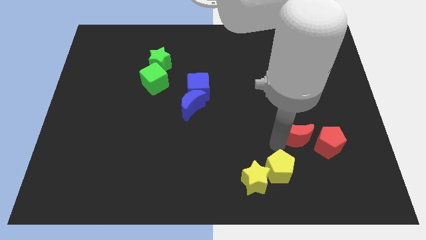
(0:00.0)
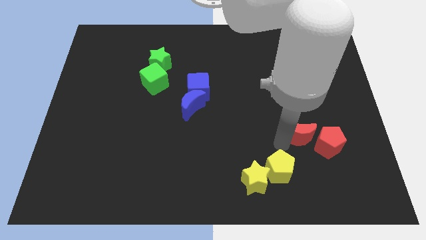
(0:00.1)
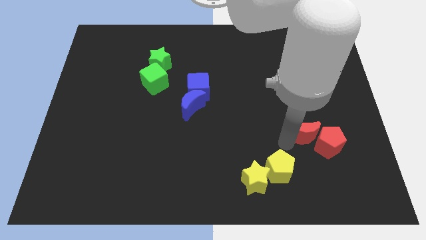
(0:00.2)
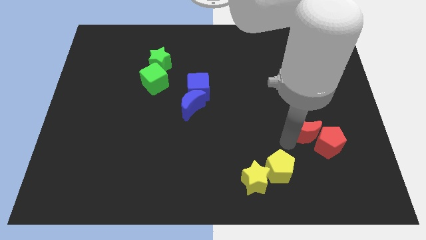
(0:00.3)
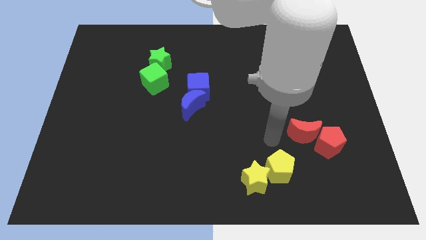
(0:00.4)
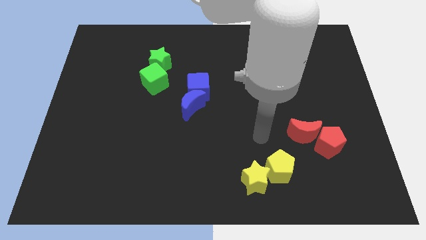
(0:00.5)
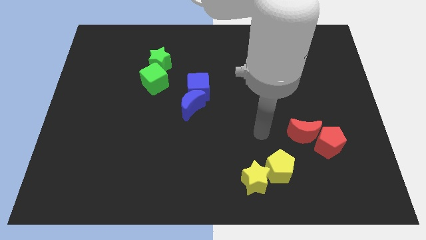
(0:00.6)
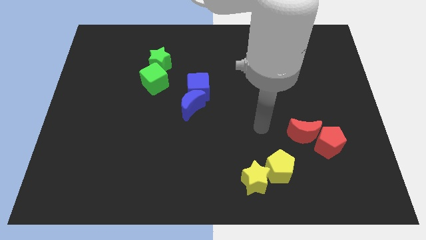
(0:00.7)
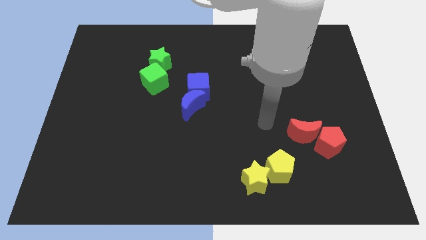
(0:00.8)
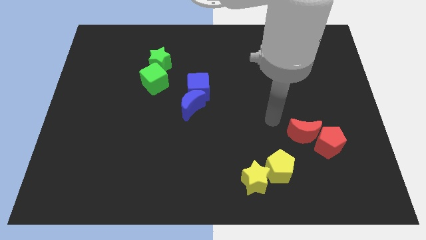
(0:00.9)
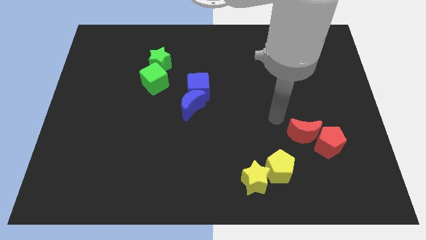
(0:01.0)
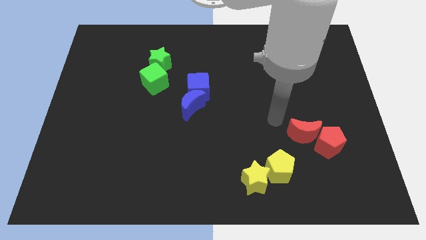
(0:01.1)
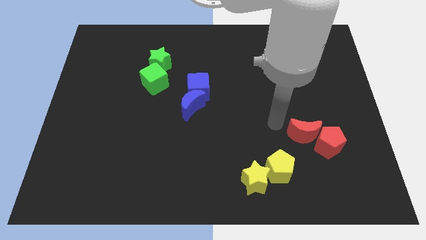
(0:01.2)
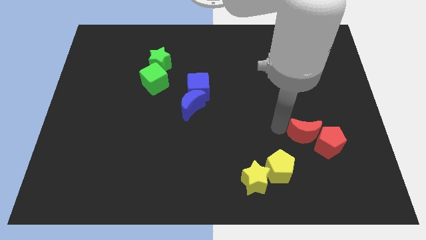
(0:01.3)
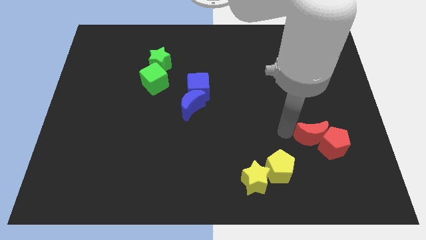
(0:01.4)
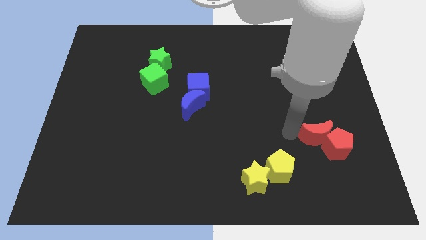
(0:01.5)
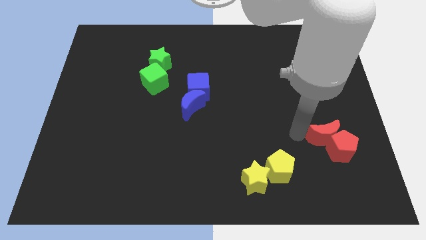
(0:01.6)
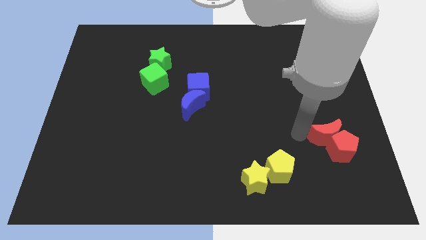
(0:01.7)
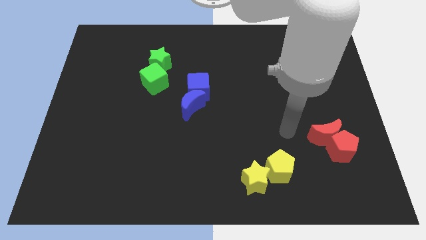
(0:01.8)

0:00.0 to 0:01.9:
push the red moon into the red pentagon

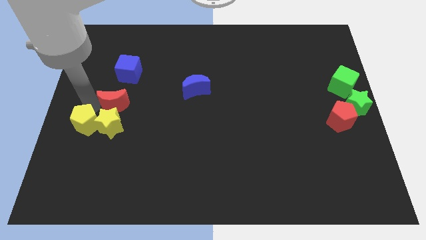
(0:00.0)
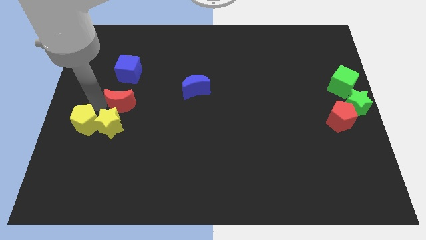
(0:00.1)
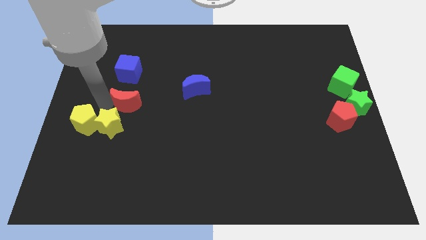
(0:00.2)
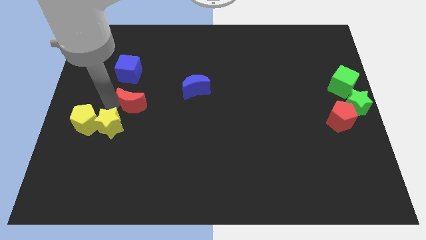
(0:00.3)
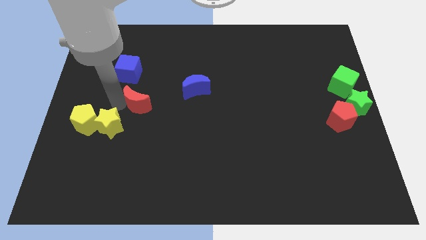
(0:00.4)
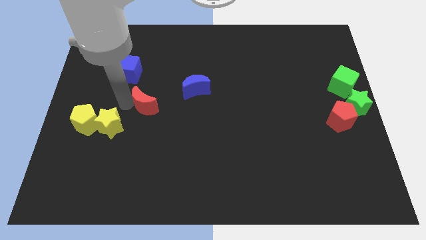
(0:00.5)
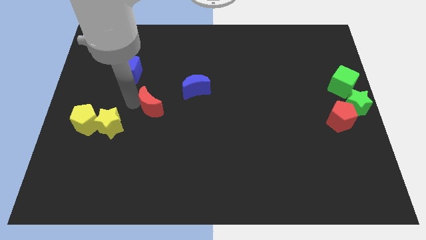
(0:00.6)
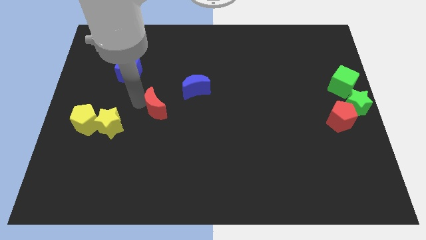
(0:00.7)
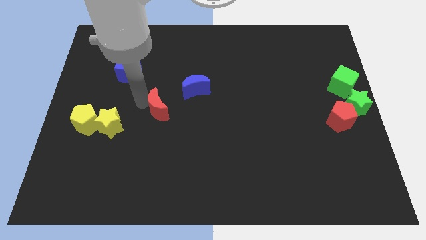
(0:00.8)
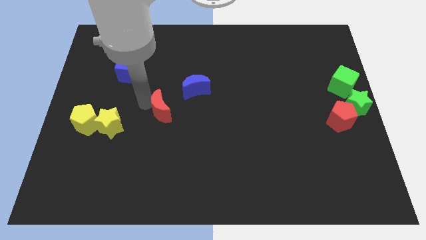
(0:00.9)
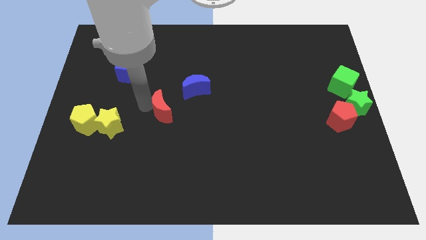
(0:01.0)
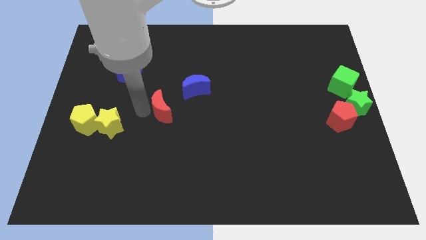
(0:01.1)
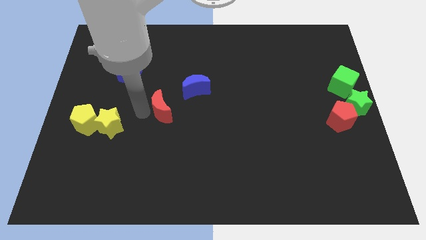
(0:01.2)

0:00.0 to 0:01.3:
move the red moon away from the yellow blocks

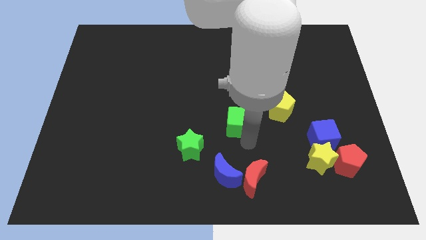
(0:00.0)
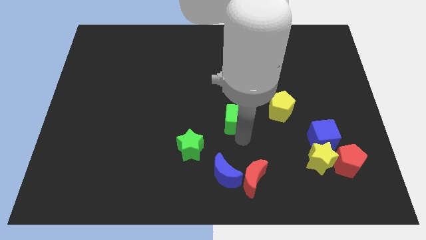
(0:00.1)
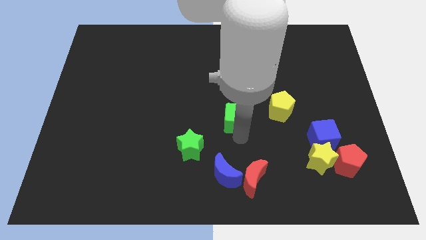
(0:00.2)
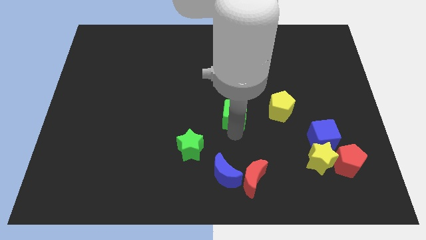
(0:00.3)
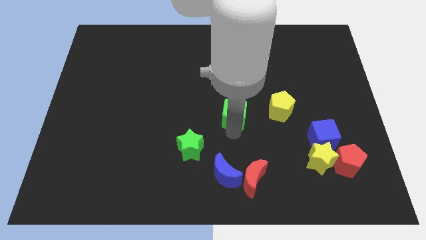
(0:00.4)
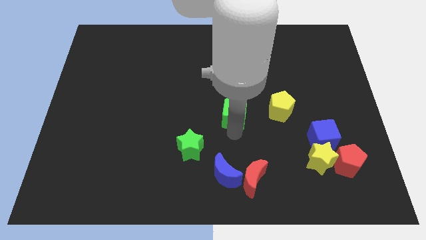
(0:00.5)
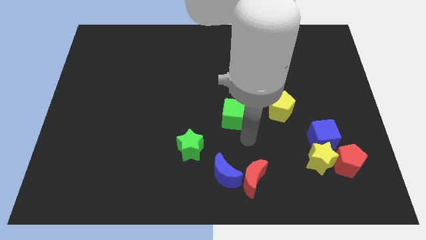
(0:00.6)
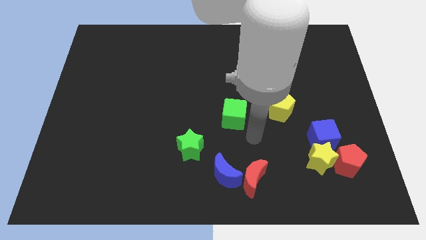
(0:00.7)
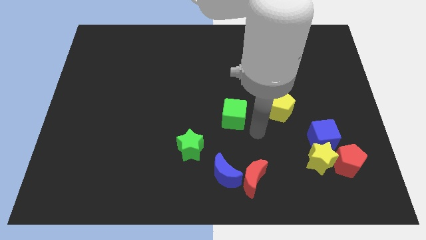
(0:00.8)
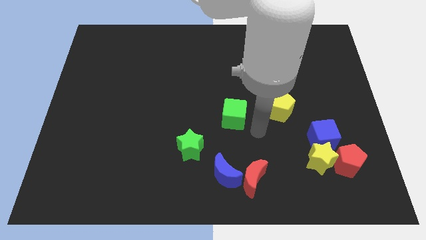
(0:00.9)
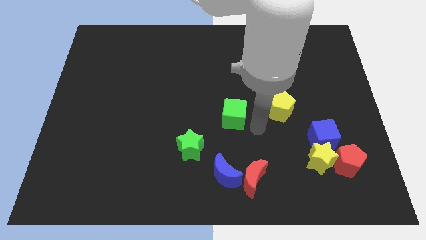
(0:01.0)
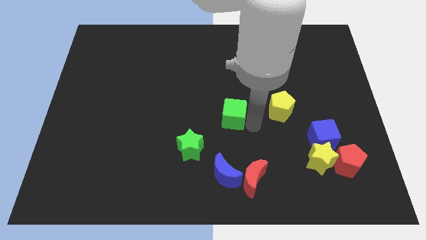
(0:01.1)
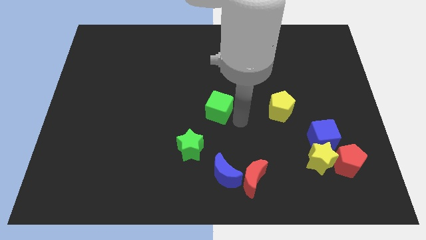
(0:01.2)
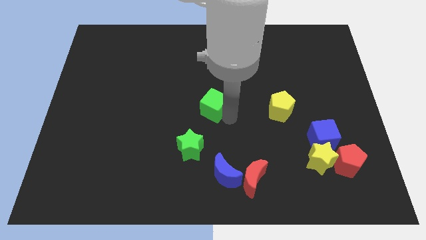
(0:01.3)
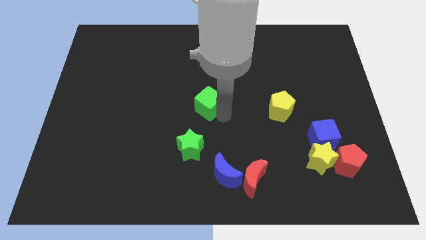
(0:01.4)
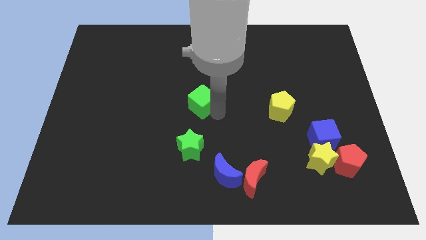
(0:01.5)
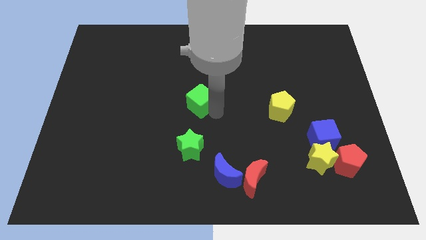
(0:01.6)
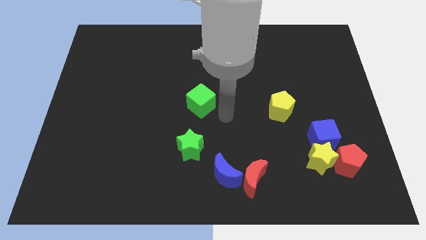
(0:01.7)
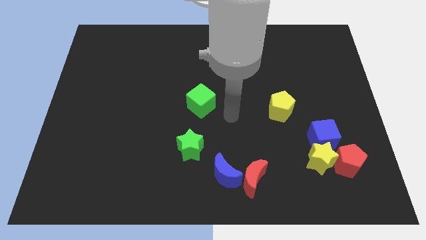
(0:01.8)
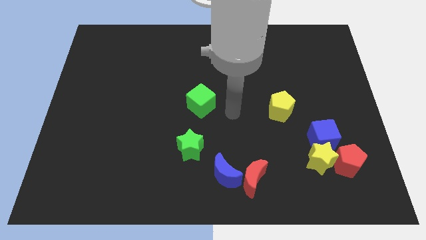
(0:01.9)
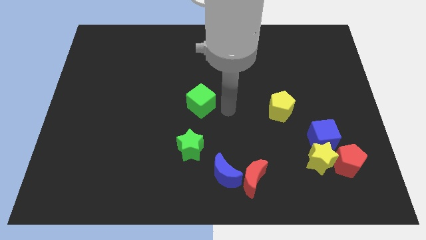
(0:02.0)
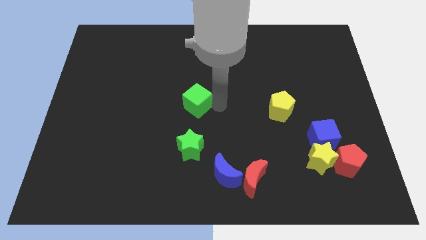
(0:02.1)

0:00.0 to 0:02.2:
move the green cube to the top of the green star

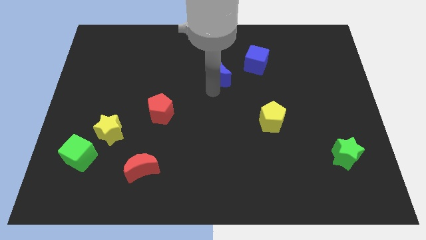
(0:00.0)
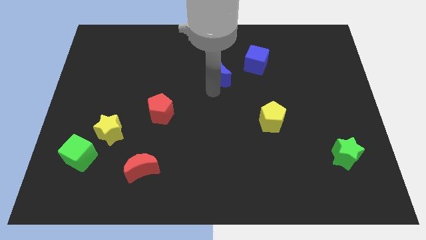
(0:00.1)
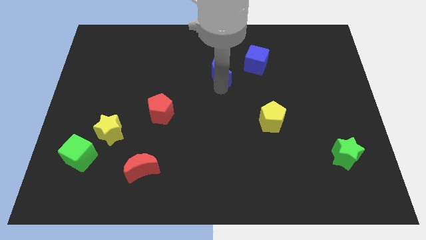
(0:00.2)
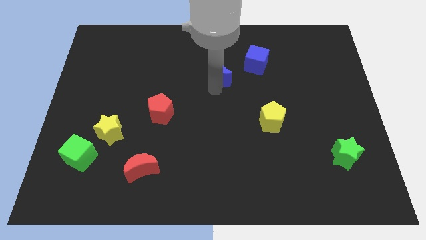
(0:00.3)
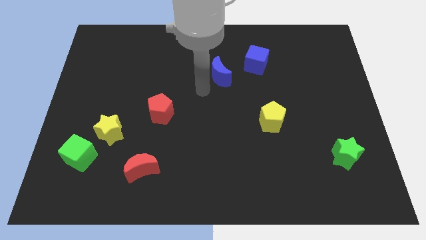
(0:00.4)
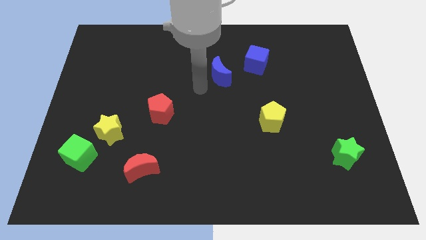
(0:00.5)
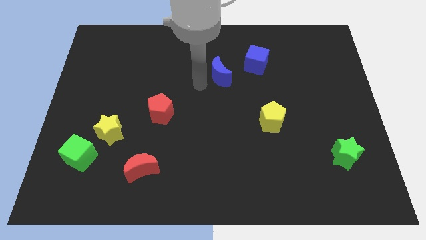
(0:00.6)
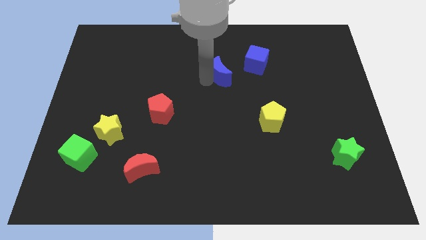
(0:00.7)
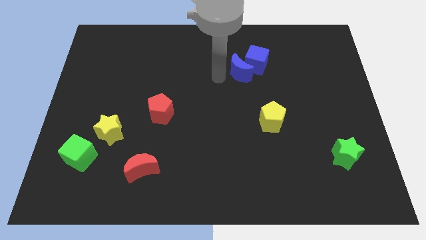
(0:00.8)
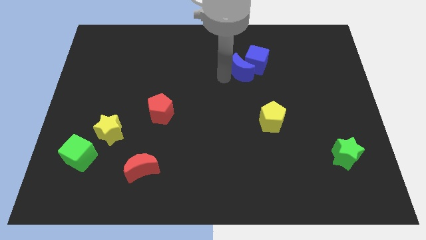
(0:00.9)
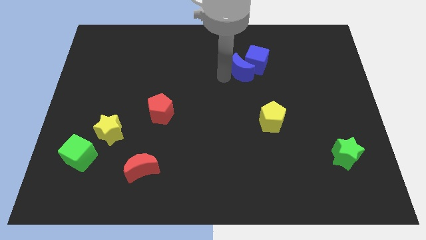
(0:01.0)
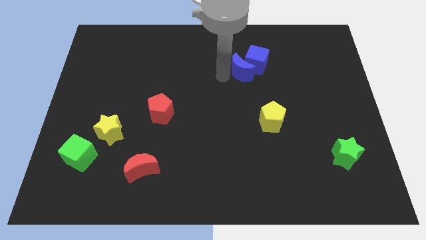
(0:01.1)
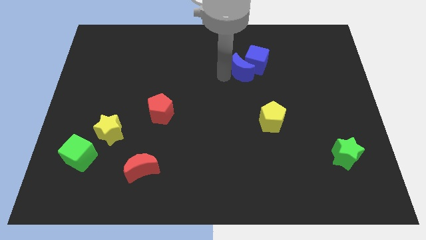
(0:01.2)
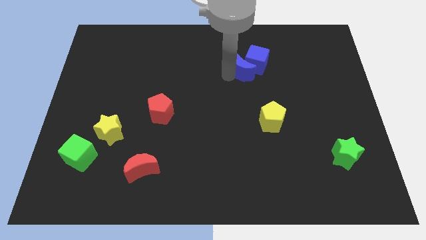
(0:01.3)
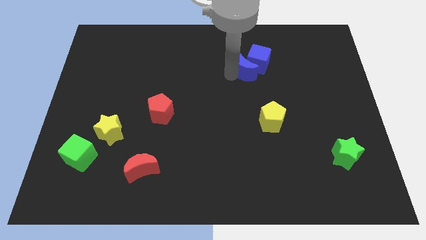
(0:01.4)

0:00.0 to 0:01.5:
push the blue moon into the blue cube

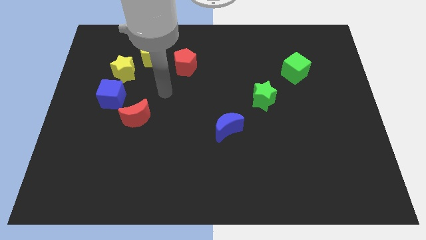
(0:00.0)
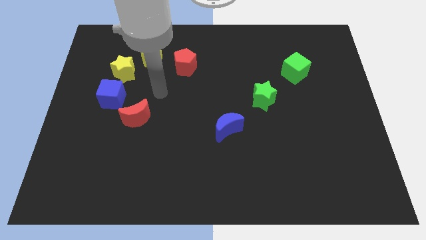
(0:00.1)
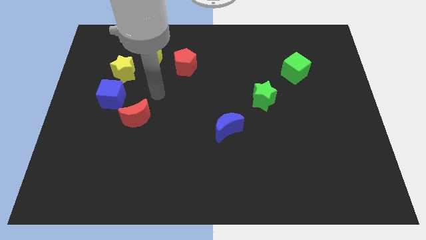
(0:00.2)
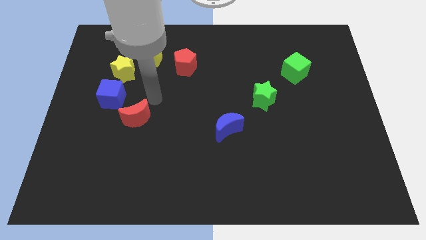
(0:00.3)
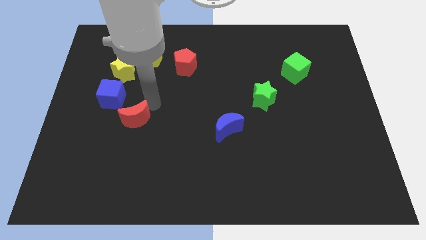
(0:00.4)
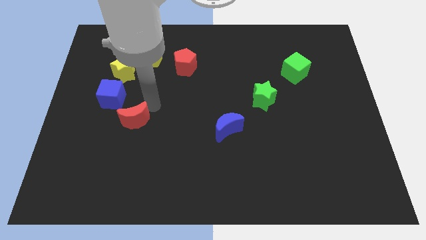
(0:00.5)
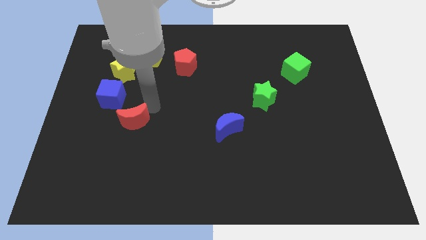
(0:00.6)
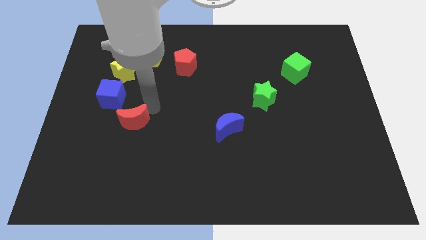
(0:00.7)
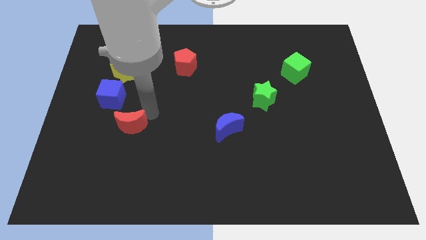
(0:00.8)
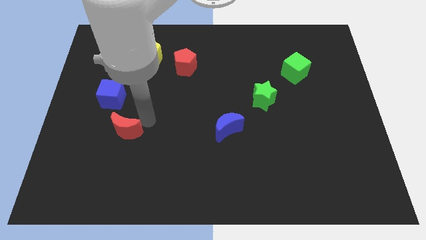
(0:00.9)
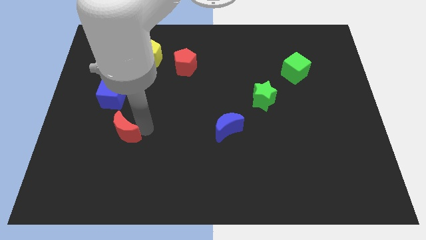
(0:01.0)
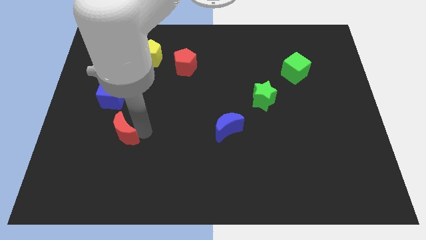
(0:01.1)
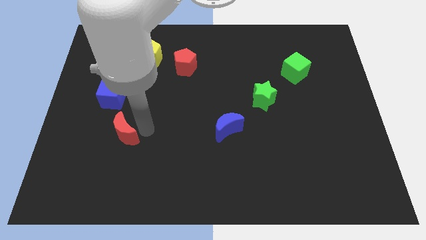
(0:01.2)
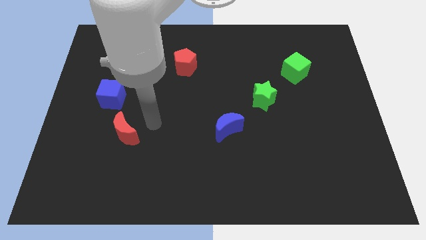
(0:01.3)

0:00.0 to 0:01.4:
slightly turn the red moon below the blue cube

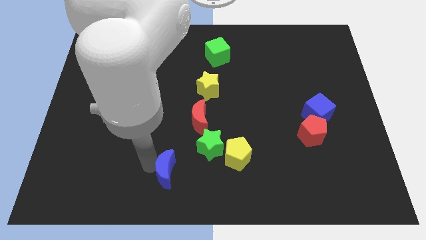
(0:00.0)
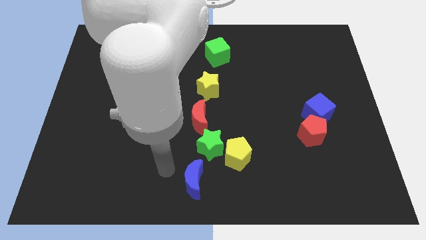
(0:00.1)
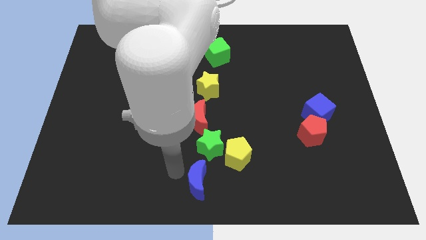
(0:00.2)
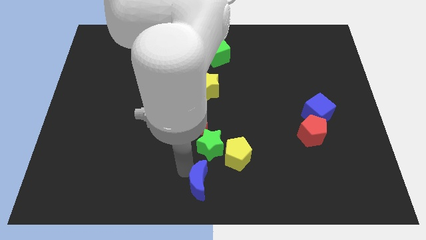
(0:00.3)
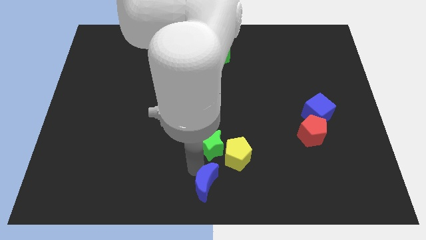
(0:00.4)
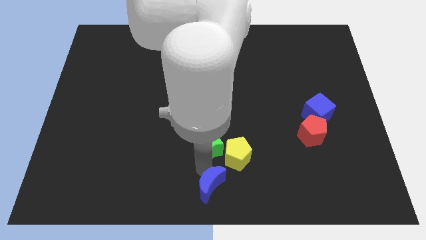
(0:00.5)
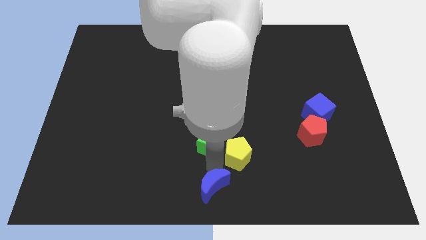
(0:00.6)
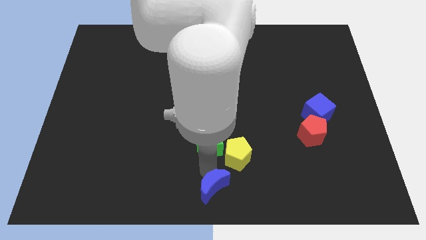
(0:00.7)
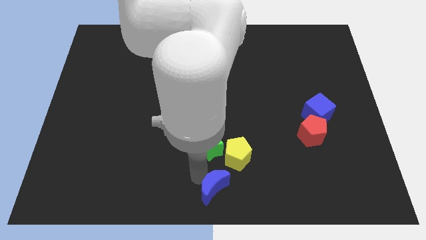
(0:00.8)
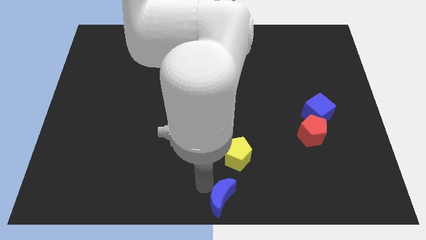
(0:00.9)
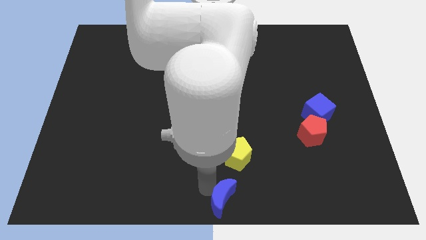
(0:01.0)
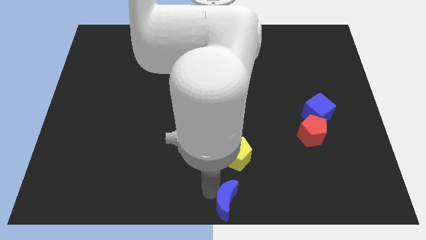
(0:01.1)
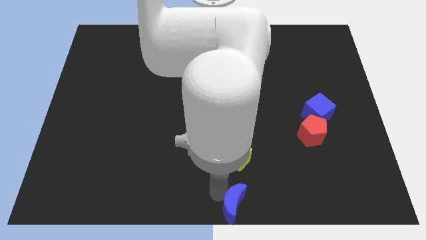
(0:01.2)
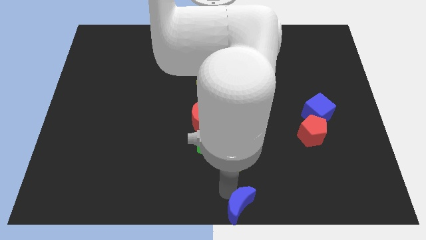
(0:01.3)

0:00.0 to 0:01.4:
move the blue crescent to the bottom of the yellow pentagon
